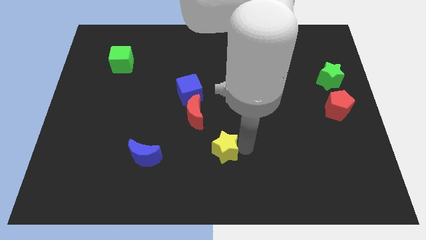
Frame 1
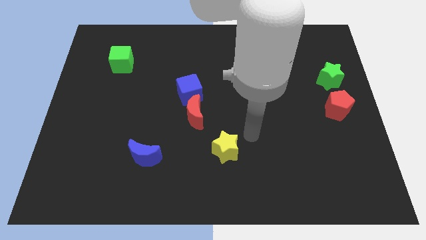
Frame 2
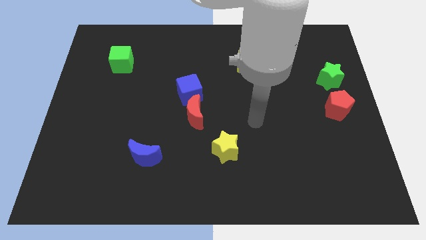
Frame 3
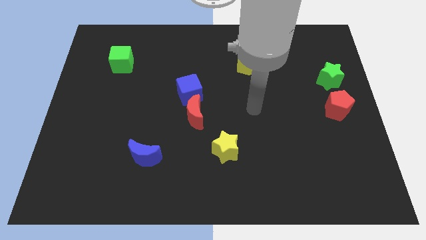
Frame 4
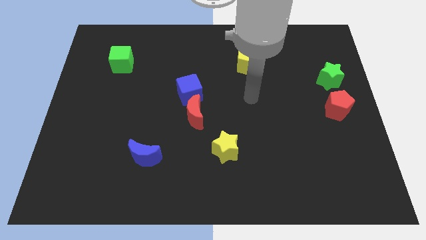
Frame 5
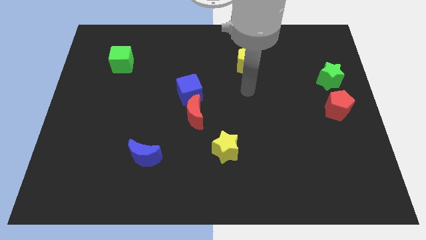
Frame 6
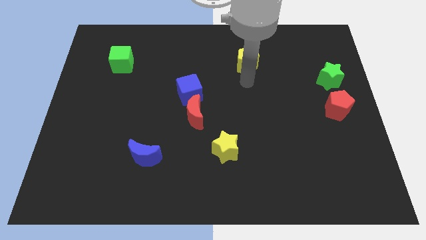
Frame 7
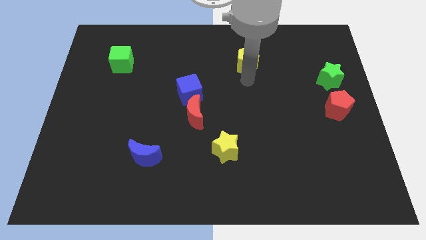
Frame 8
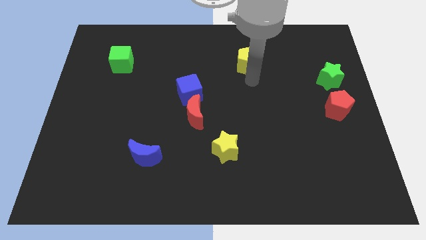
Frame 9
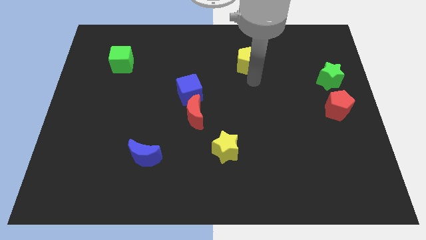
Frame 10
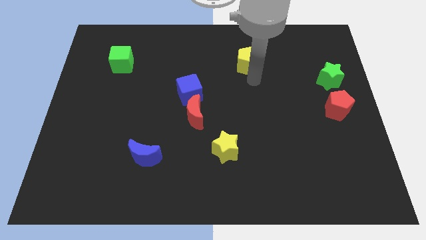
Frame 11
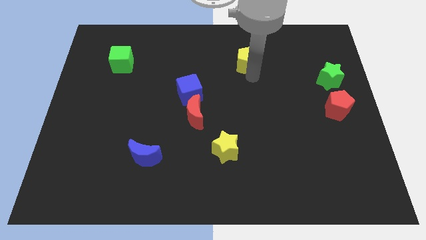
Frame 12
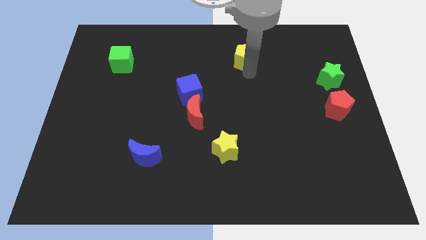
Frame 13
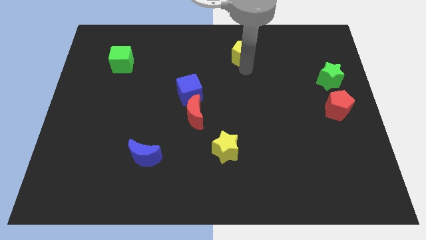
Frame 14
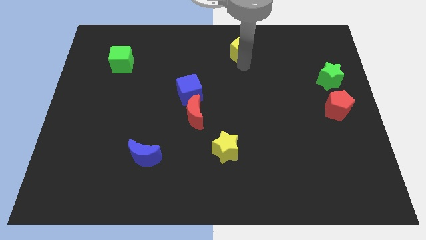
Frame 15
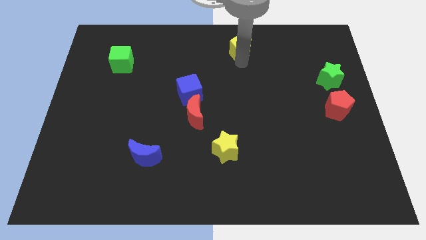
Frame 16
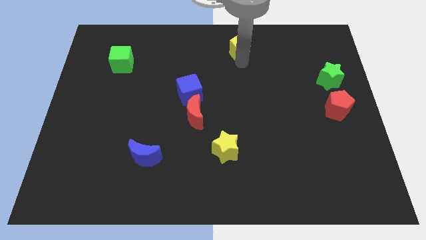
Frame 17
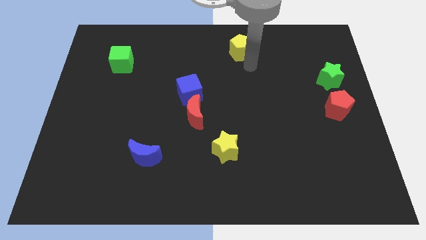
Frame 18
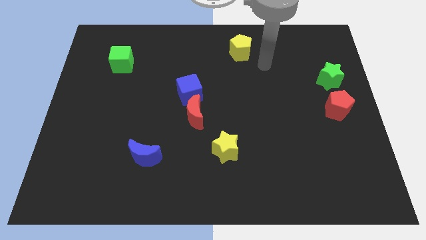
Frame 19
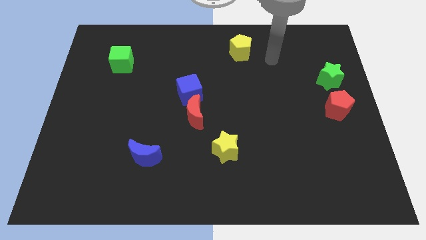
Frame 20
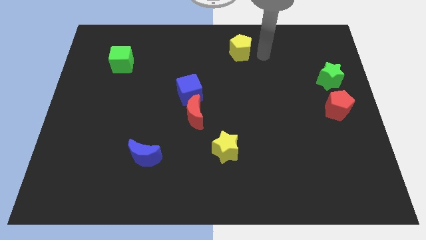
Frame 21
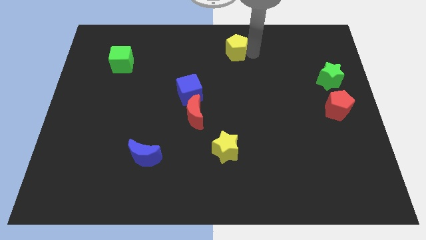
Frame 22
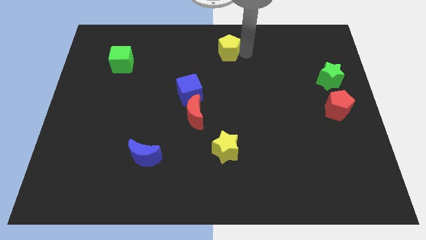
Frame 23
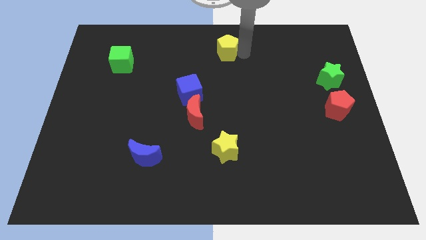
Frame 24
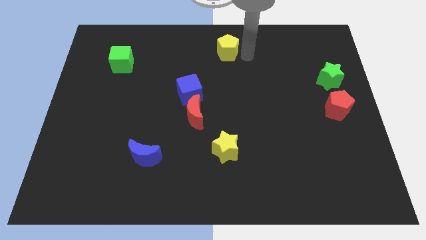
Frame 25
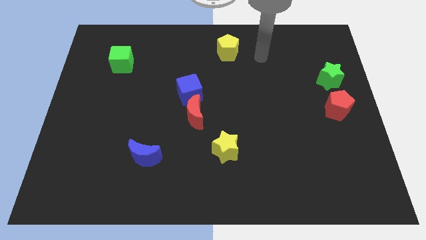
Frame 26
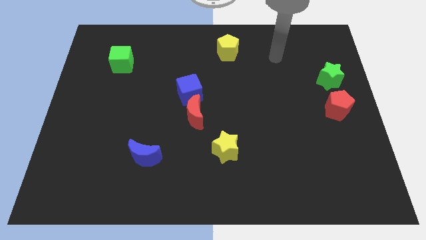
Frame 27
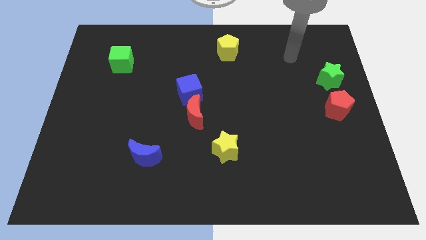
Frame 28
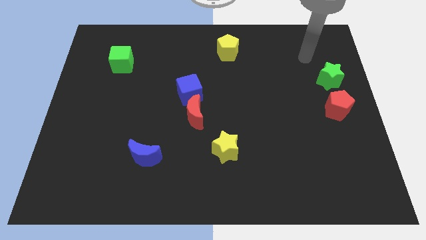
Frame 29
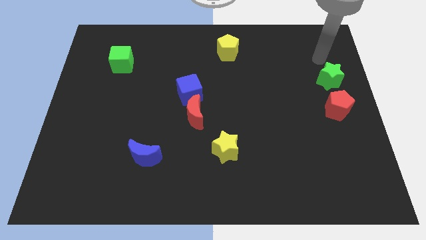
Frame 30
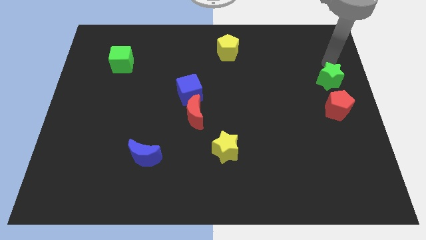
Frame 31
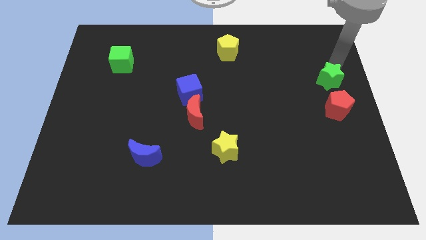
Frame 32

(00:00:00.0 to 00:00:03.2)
place the yellow pentagon at the top center of the board

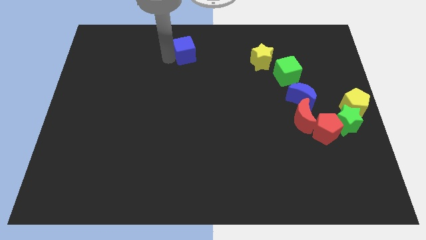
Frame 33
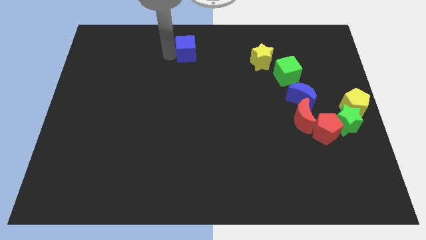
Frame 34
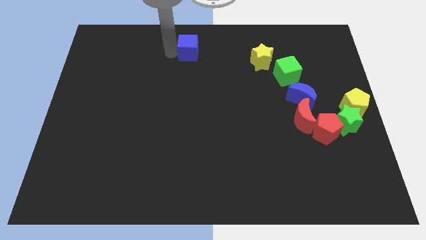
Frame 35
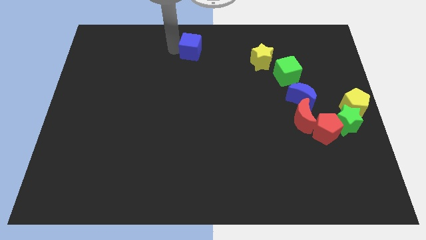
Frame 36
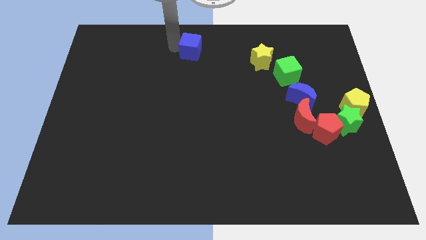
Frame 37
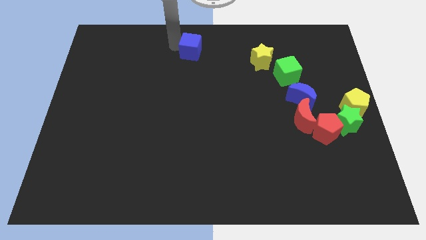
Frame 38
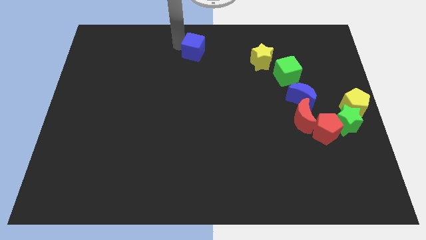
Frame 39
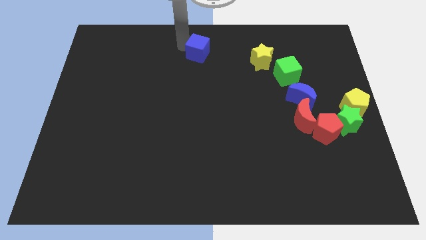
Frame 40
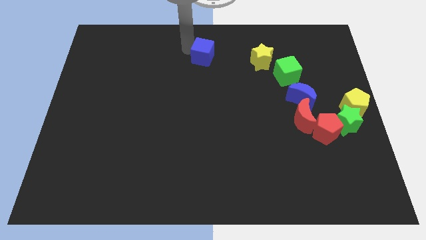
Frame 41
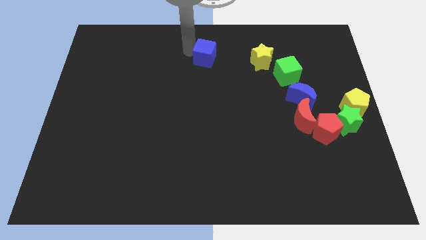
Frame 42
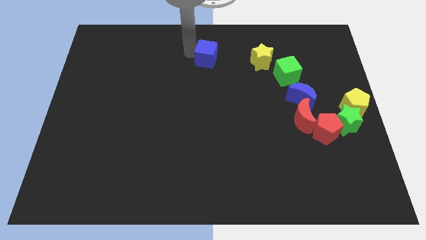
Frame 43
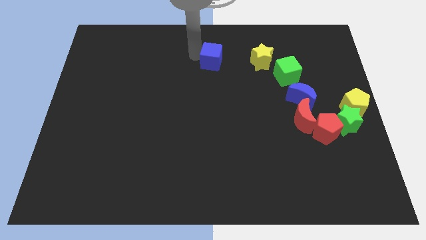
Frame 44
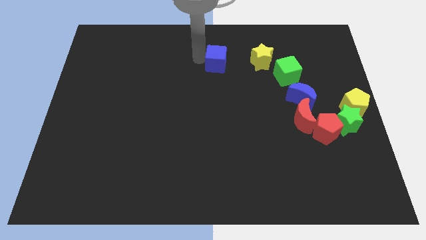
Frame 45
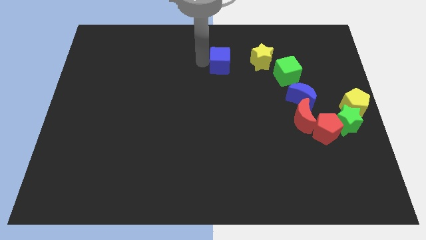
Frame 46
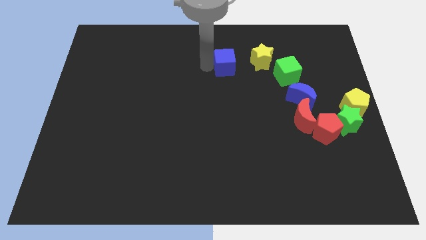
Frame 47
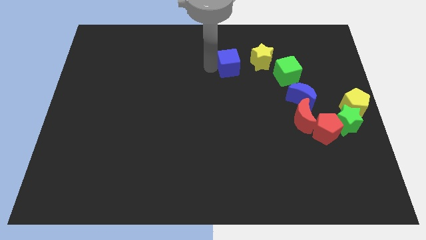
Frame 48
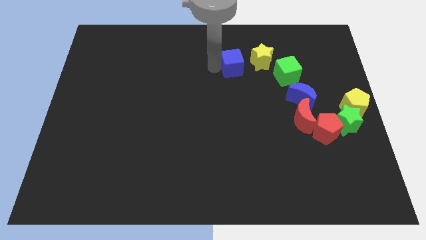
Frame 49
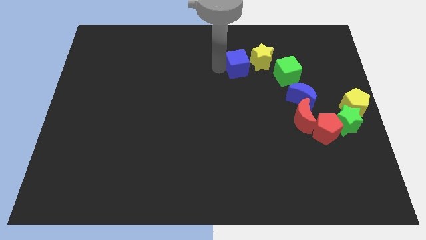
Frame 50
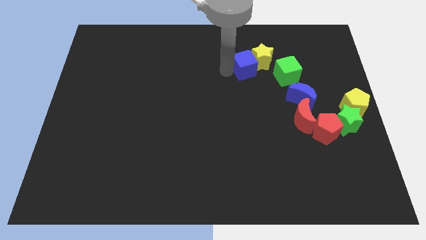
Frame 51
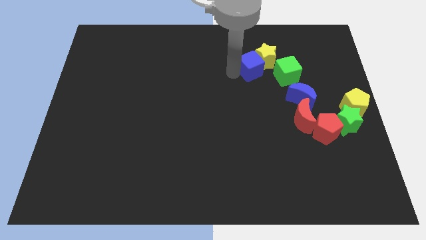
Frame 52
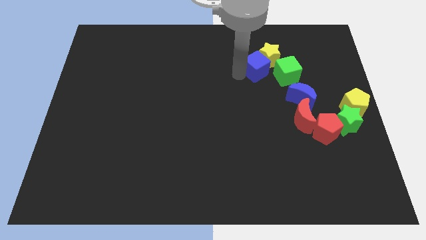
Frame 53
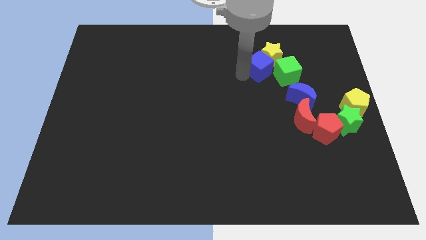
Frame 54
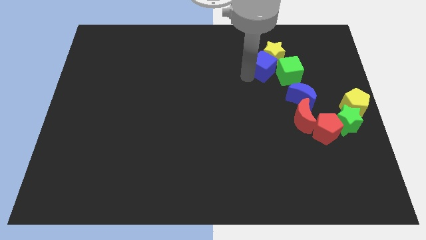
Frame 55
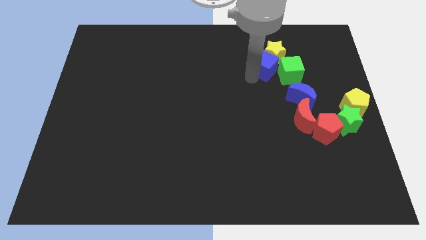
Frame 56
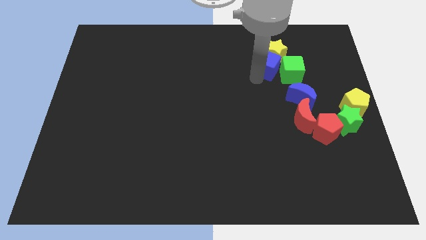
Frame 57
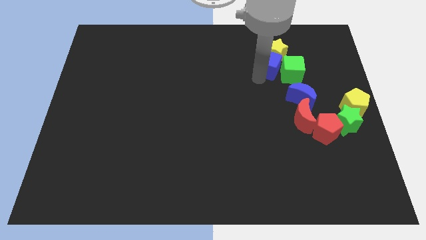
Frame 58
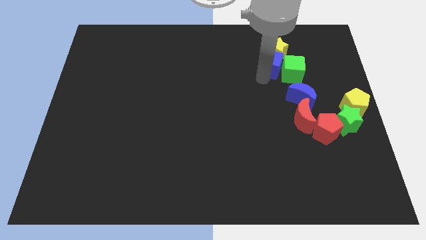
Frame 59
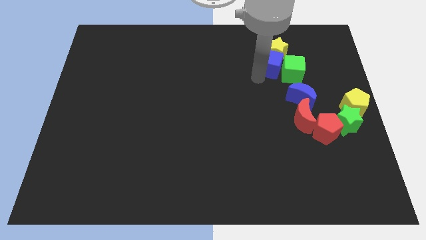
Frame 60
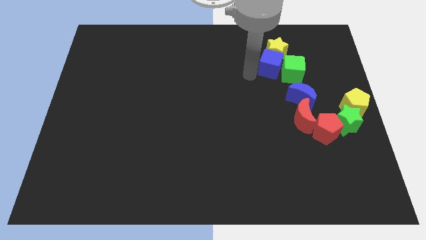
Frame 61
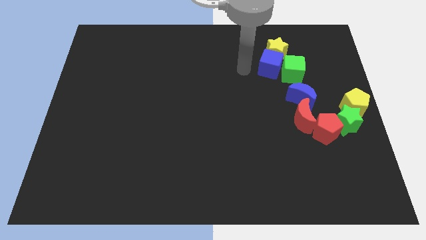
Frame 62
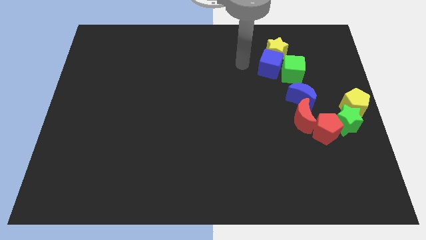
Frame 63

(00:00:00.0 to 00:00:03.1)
place the blue cube left to the green cube

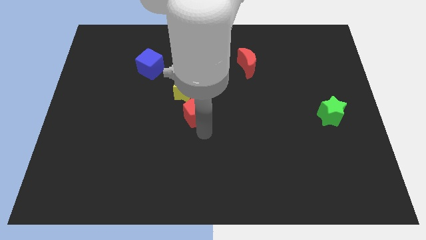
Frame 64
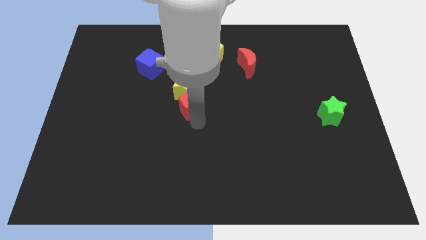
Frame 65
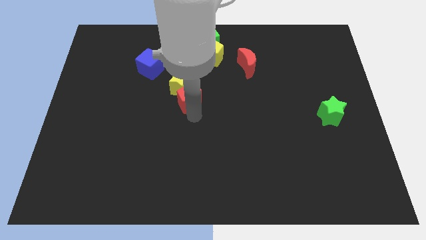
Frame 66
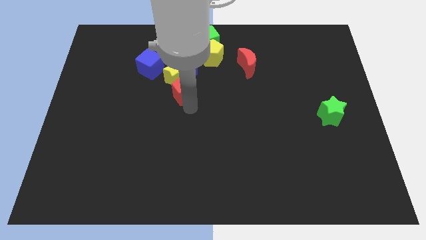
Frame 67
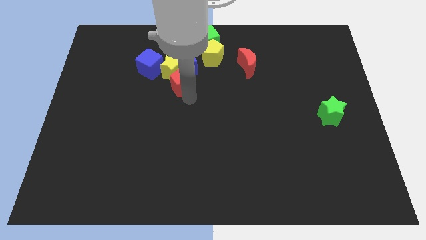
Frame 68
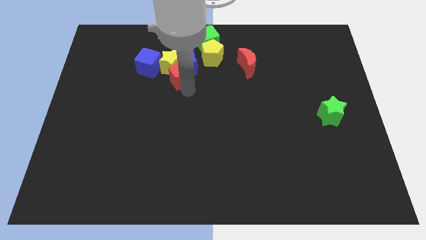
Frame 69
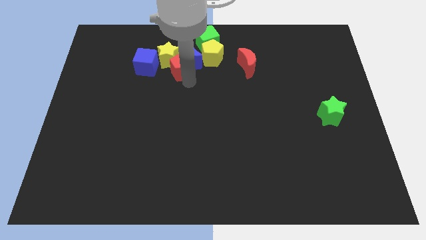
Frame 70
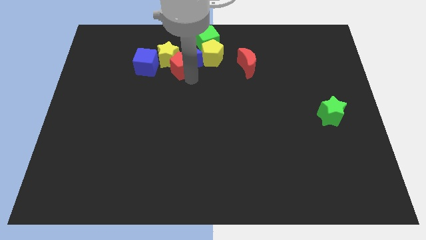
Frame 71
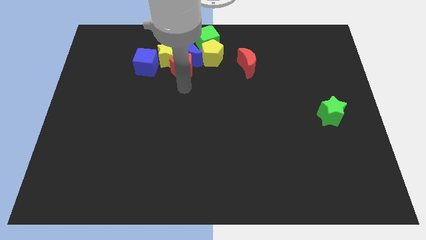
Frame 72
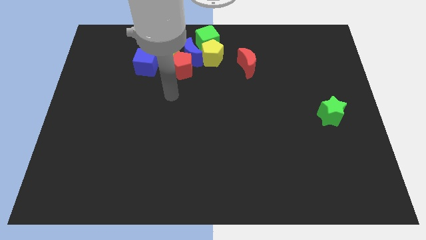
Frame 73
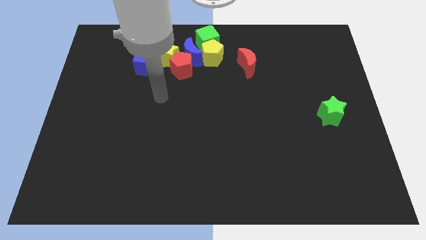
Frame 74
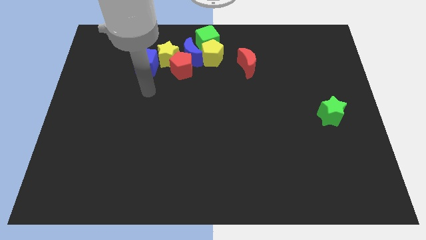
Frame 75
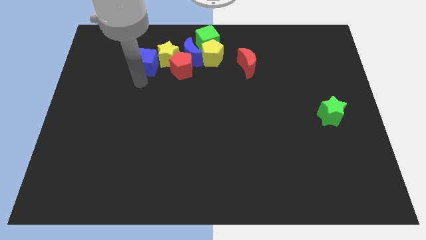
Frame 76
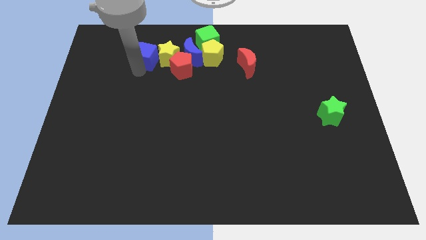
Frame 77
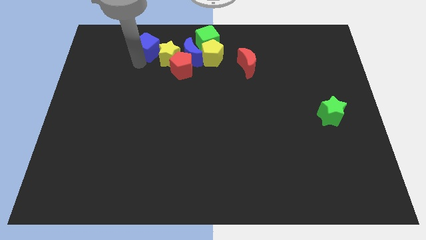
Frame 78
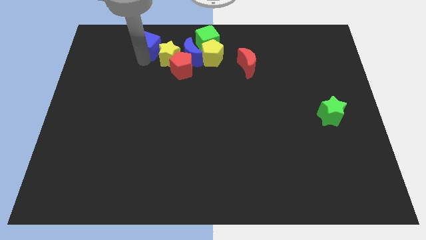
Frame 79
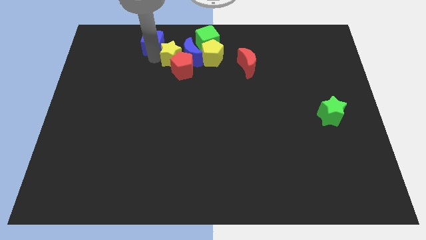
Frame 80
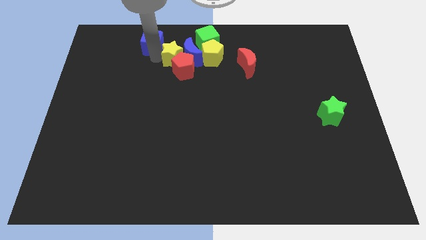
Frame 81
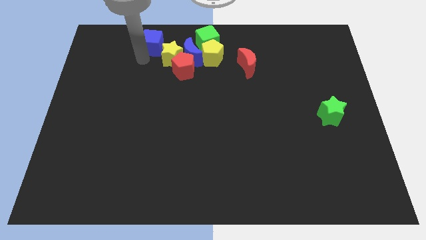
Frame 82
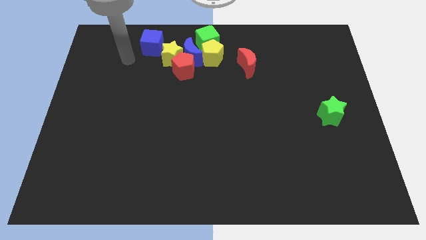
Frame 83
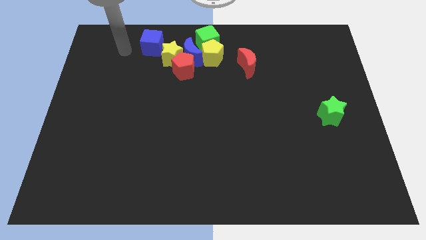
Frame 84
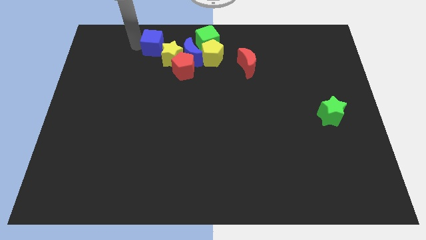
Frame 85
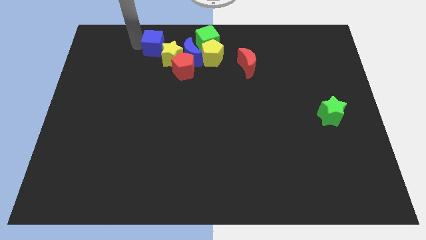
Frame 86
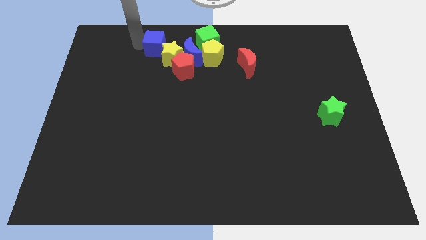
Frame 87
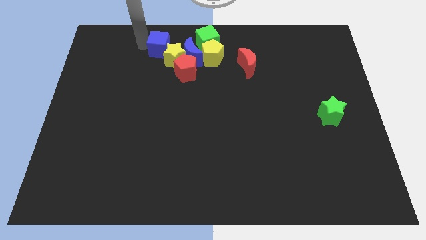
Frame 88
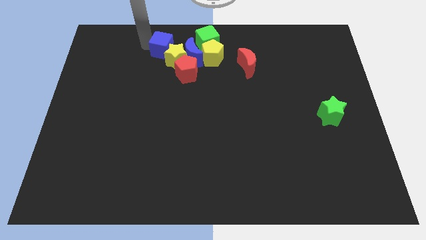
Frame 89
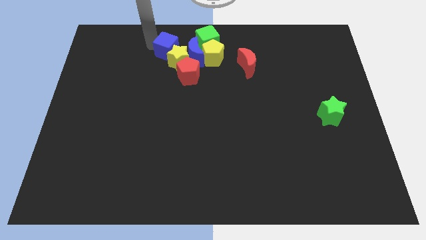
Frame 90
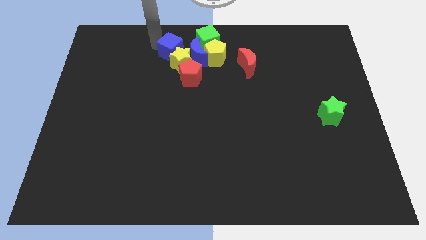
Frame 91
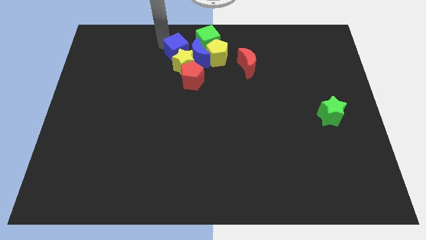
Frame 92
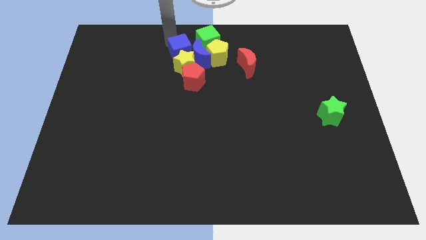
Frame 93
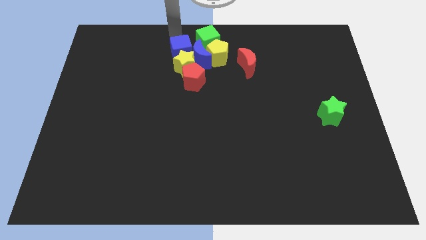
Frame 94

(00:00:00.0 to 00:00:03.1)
move the blue cube above the yellow star
